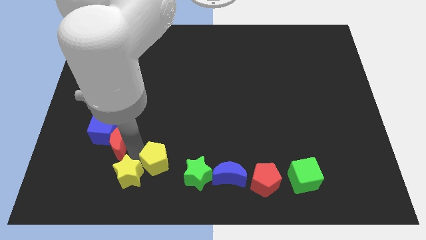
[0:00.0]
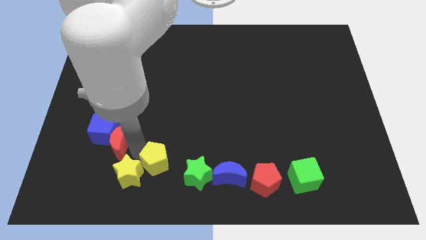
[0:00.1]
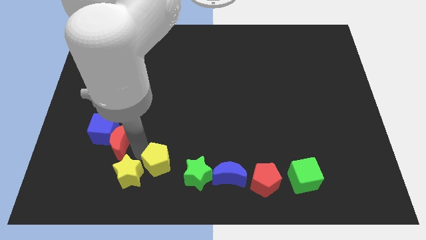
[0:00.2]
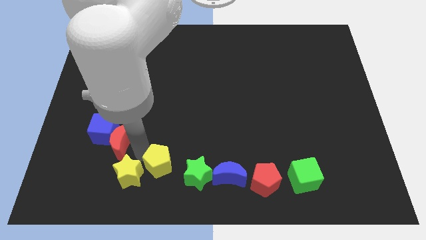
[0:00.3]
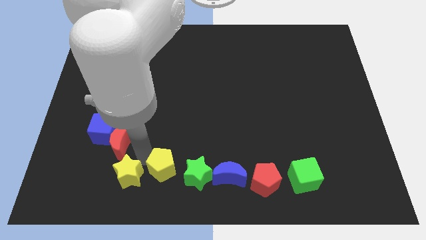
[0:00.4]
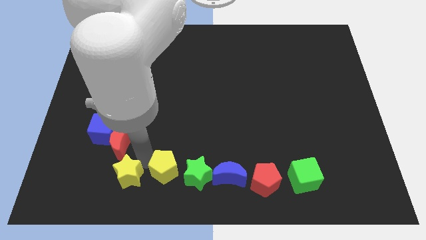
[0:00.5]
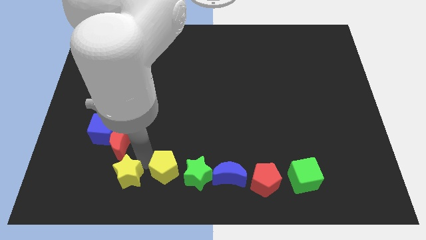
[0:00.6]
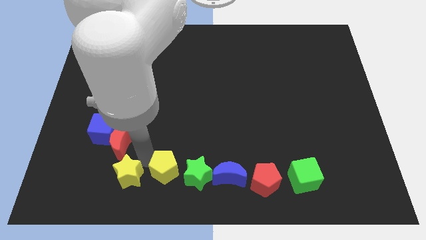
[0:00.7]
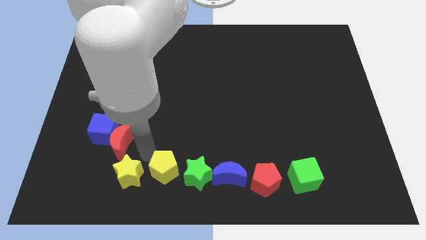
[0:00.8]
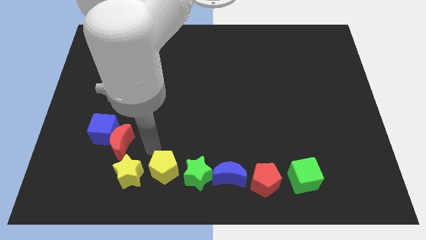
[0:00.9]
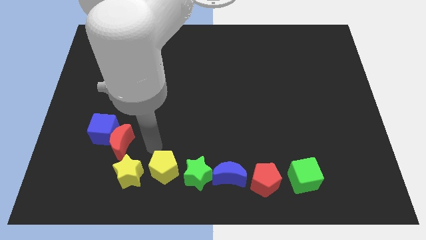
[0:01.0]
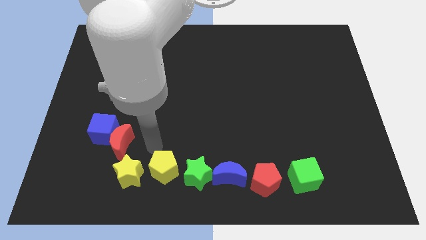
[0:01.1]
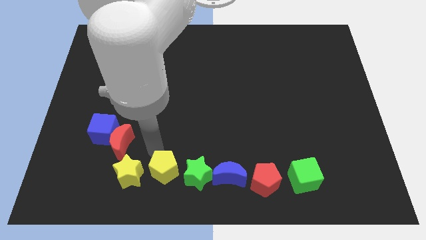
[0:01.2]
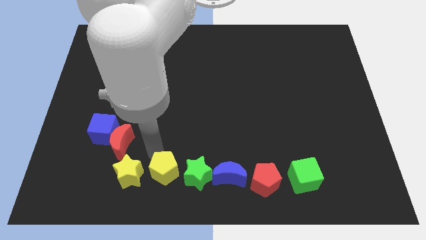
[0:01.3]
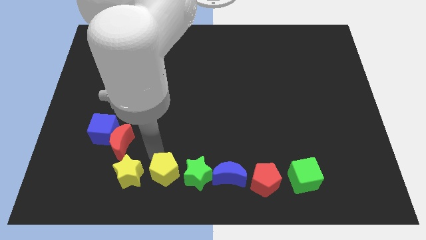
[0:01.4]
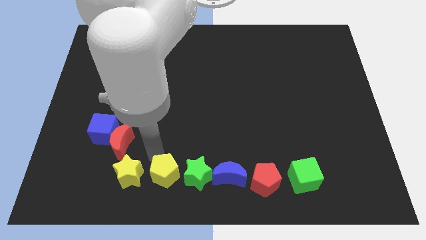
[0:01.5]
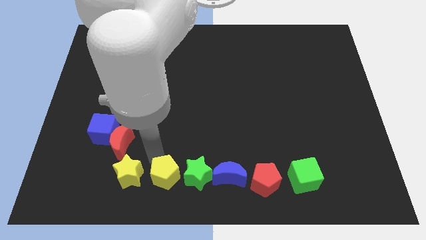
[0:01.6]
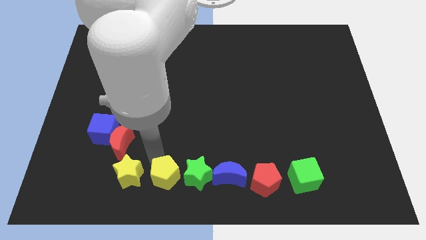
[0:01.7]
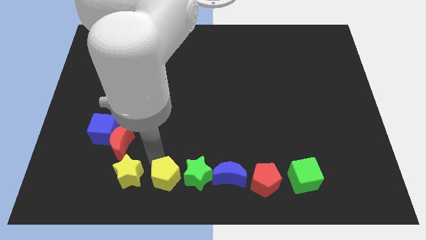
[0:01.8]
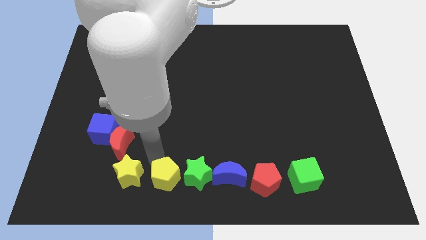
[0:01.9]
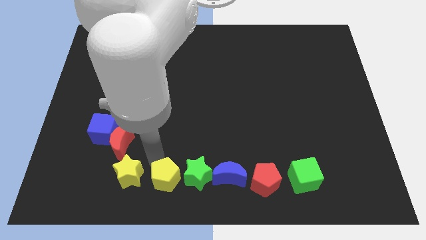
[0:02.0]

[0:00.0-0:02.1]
put the yellow pentagon left to the green star

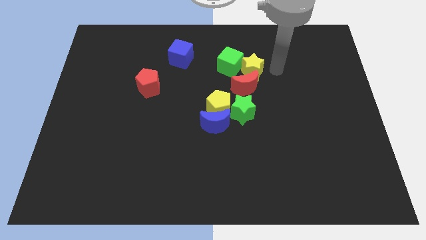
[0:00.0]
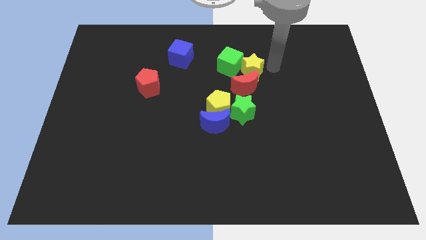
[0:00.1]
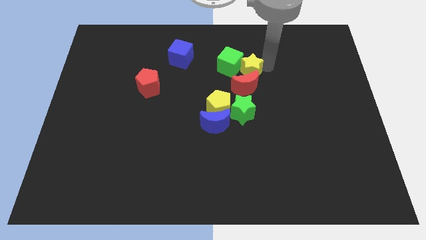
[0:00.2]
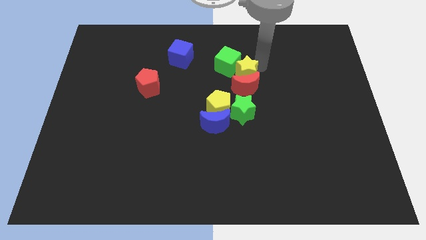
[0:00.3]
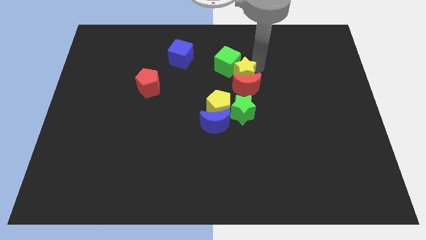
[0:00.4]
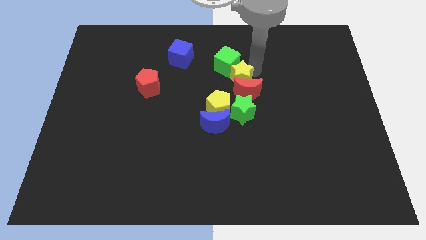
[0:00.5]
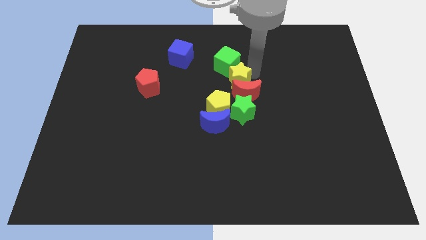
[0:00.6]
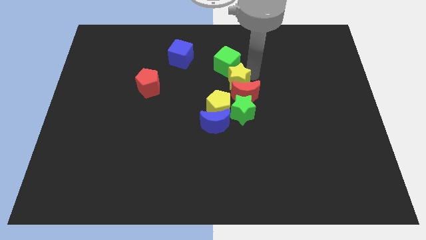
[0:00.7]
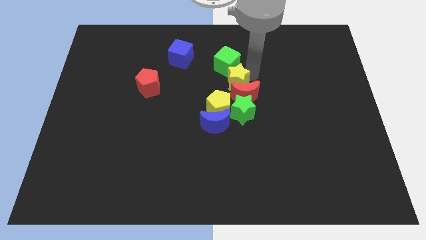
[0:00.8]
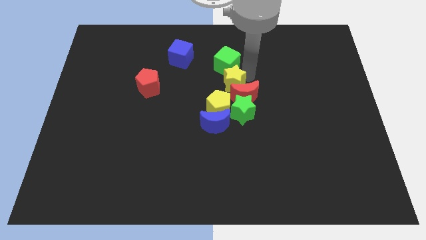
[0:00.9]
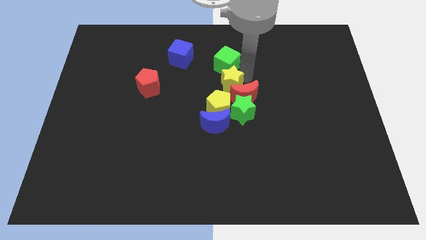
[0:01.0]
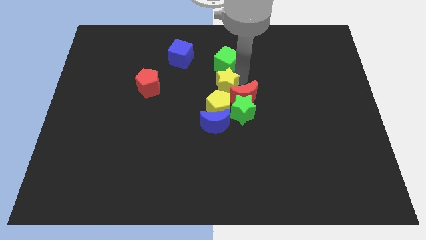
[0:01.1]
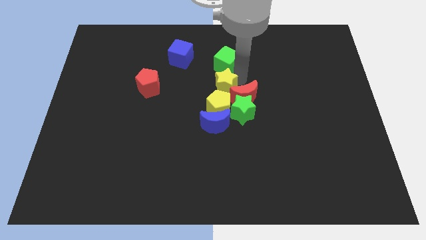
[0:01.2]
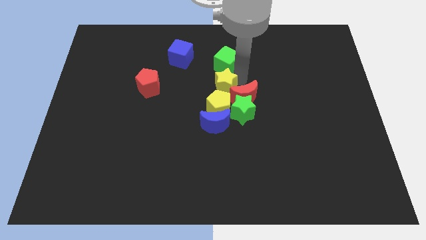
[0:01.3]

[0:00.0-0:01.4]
move the yellow star to the top right side of the yellow pentagon

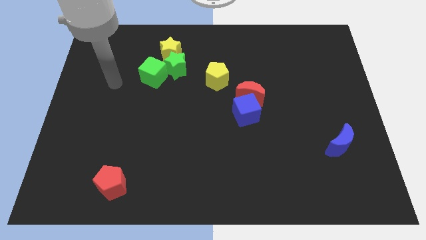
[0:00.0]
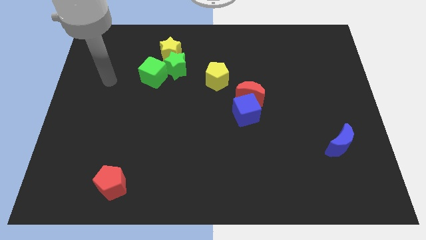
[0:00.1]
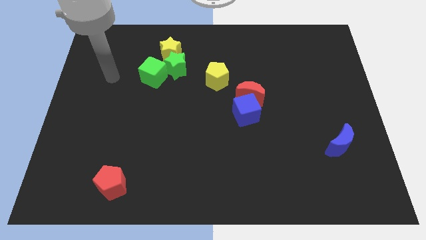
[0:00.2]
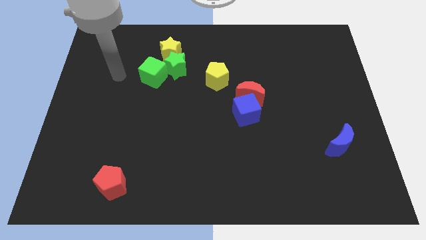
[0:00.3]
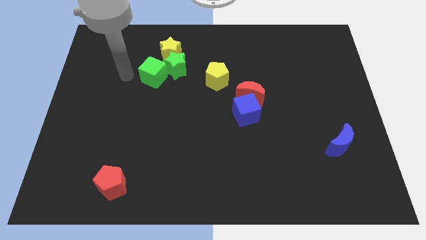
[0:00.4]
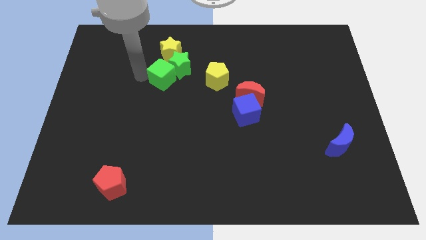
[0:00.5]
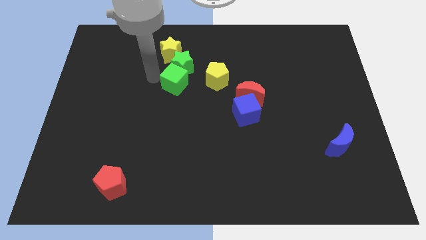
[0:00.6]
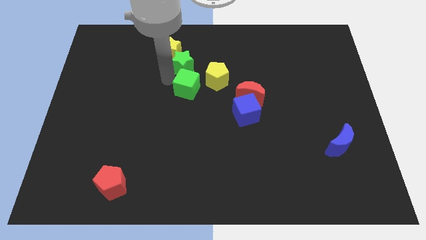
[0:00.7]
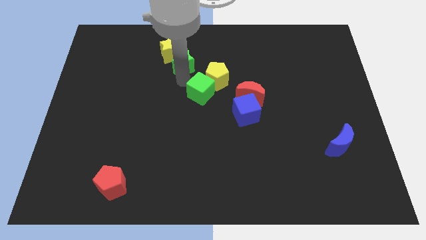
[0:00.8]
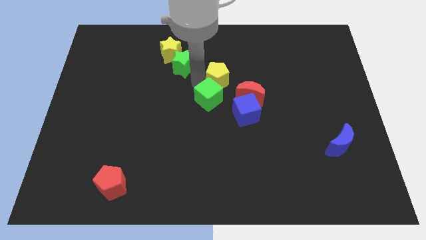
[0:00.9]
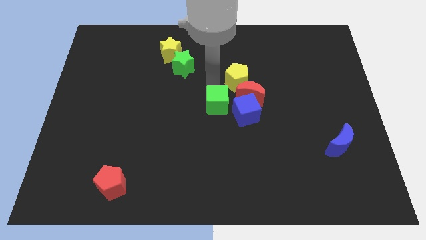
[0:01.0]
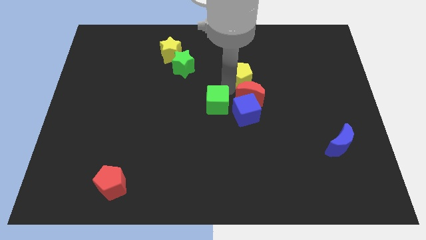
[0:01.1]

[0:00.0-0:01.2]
separate green cube from green star

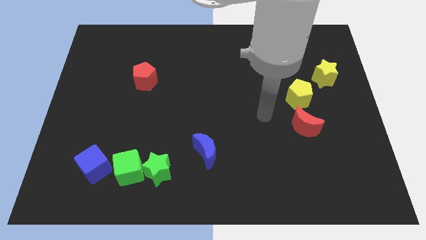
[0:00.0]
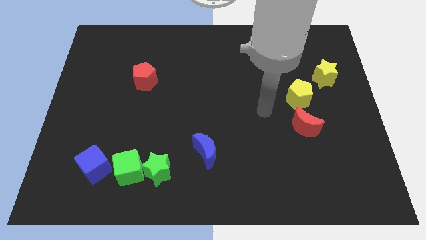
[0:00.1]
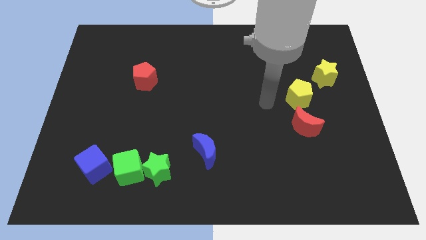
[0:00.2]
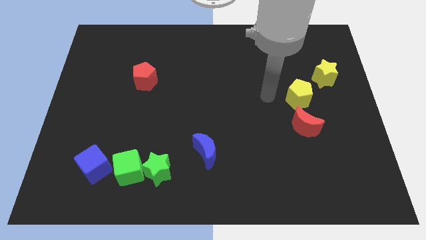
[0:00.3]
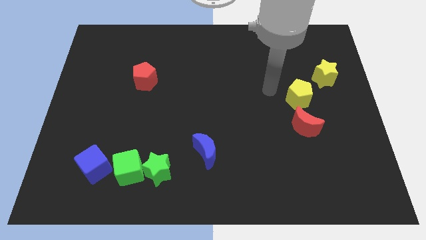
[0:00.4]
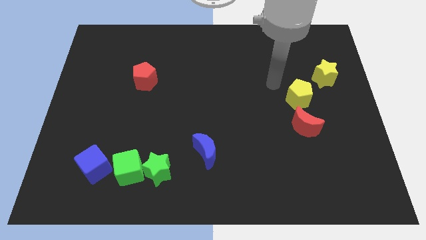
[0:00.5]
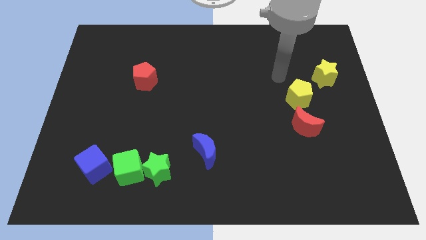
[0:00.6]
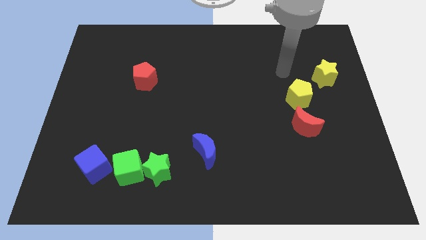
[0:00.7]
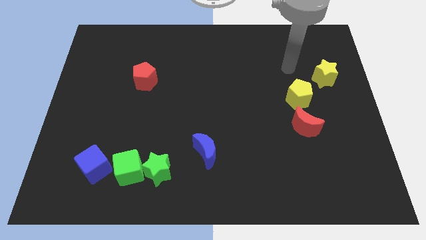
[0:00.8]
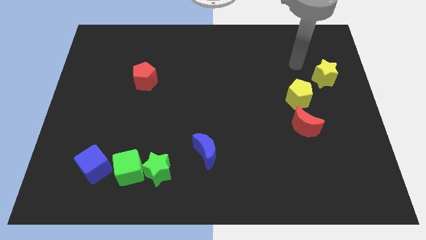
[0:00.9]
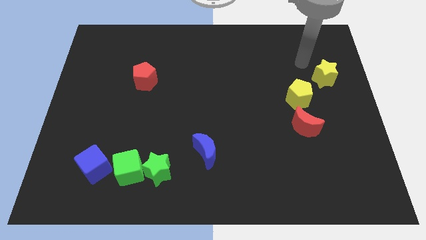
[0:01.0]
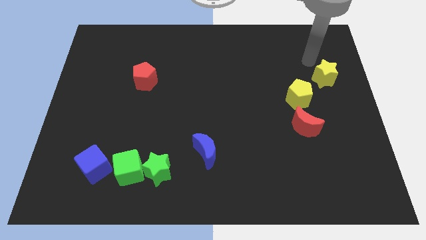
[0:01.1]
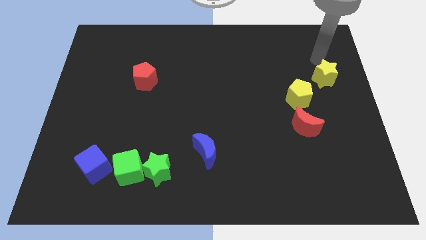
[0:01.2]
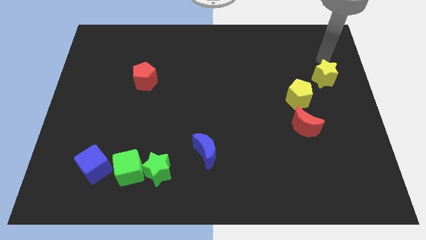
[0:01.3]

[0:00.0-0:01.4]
point your hand above the yellow star

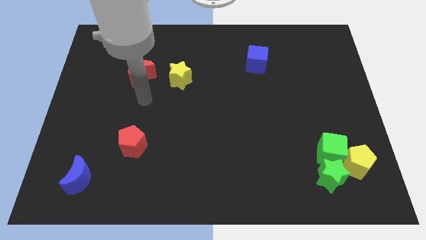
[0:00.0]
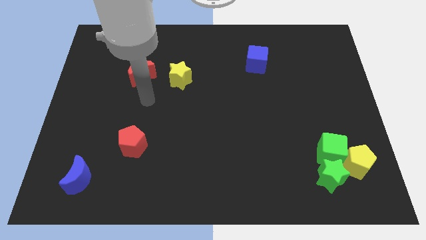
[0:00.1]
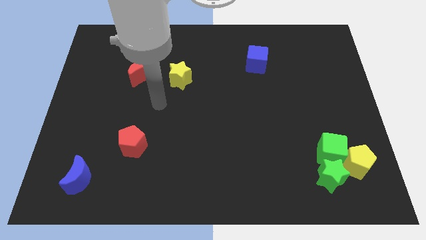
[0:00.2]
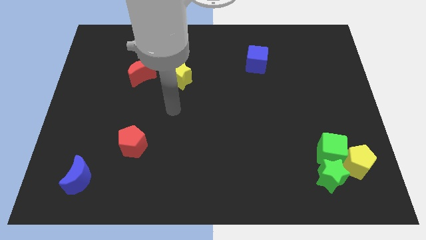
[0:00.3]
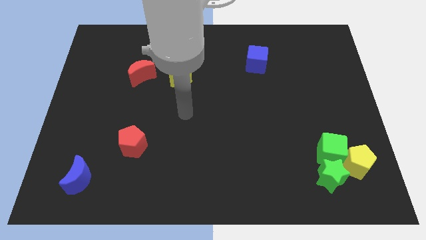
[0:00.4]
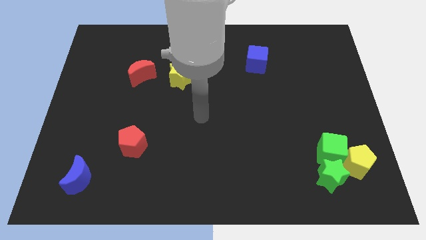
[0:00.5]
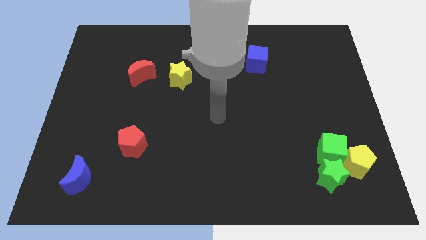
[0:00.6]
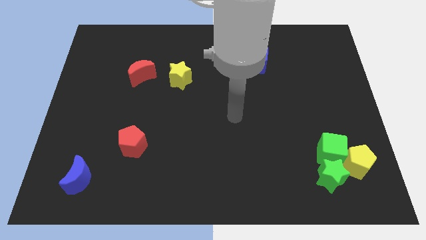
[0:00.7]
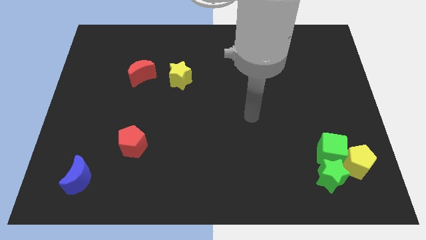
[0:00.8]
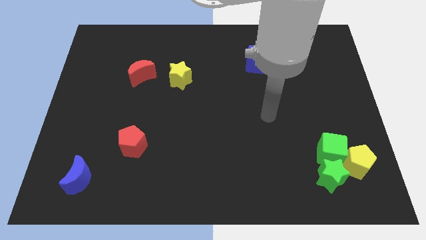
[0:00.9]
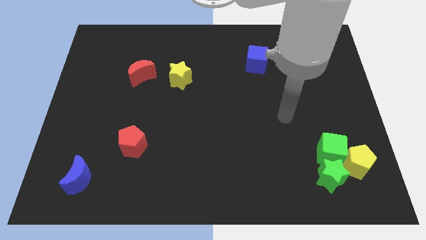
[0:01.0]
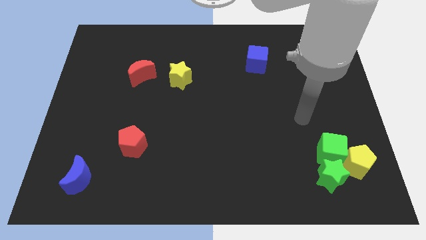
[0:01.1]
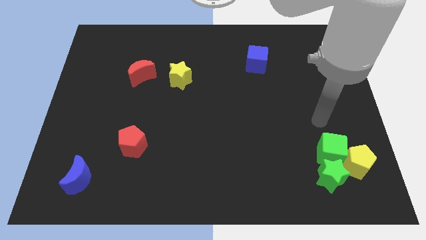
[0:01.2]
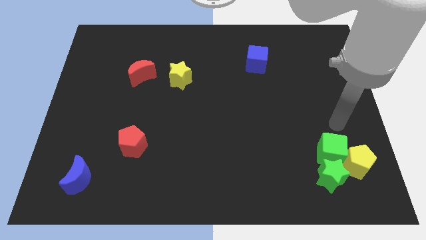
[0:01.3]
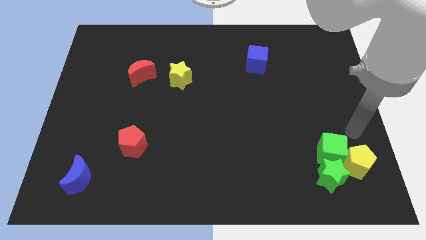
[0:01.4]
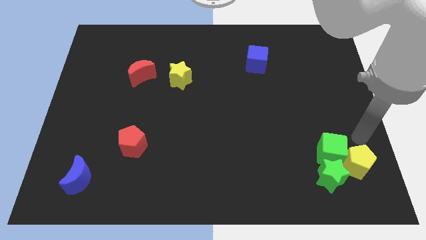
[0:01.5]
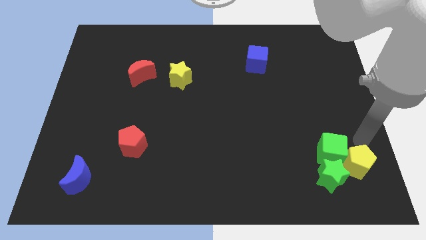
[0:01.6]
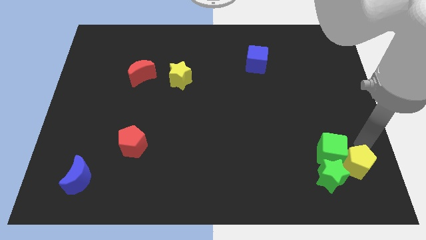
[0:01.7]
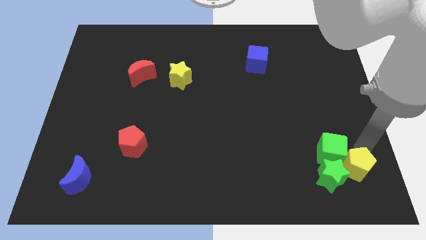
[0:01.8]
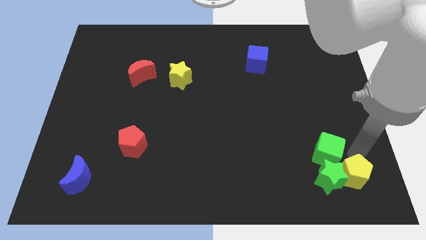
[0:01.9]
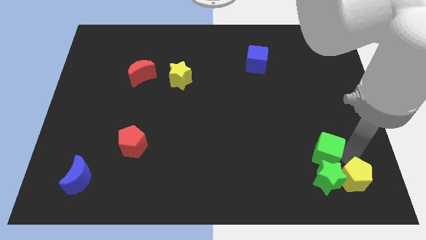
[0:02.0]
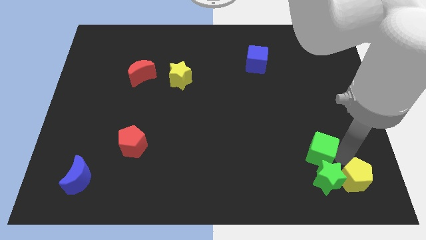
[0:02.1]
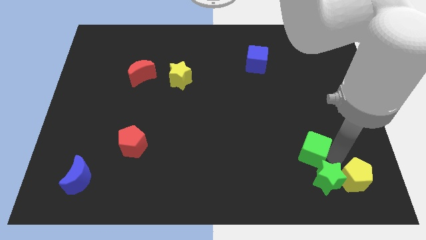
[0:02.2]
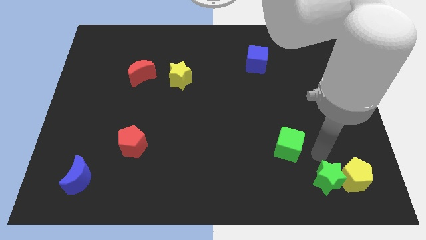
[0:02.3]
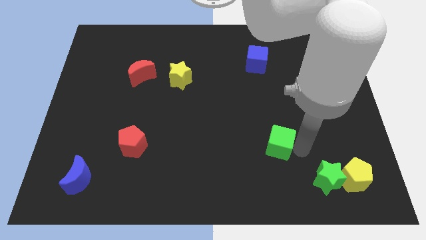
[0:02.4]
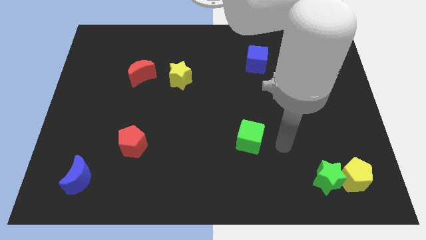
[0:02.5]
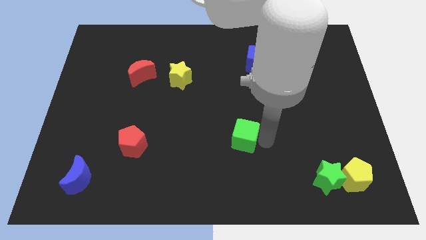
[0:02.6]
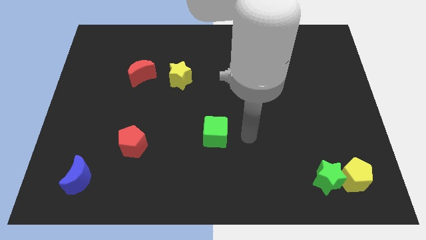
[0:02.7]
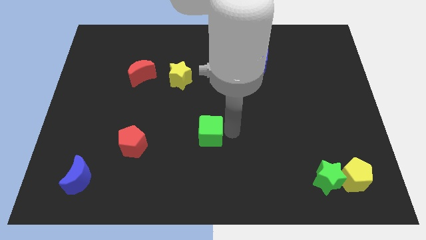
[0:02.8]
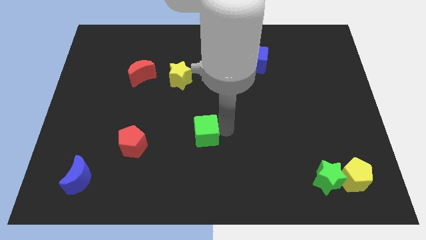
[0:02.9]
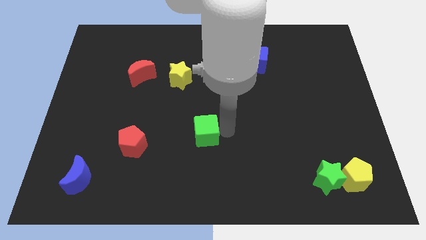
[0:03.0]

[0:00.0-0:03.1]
move the green cube towards red pentagon
